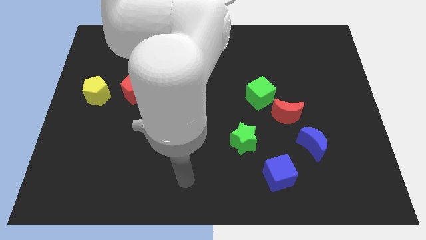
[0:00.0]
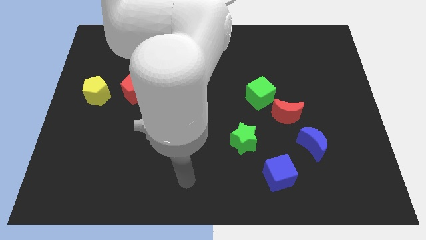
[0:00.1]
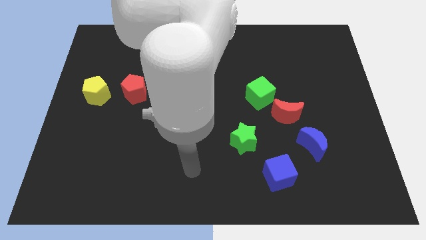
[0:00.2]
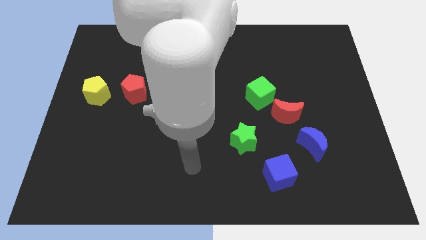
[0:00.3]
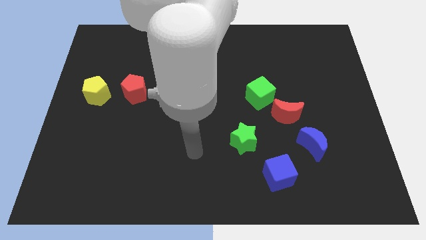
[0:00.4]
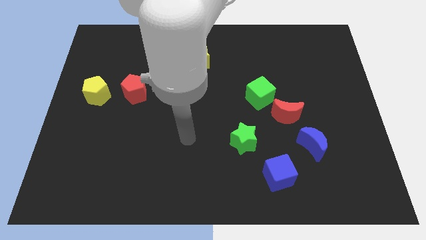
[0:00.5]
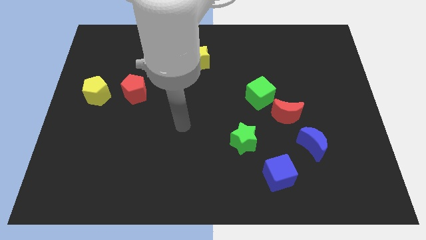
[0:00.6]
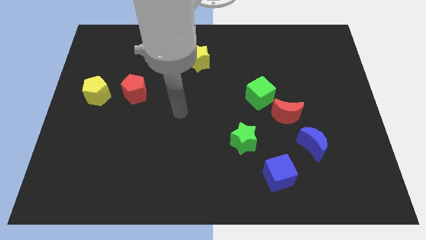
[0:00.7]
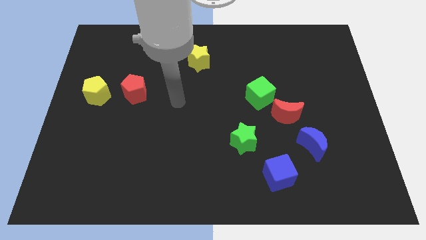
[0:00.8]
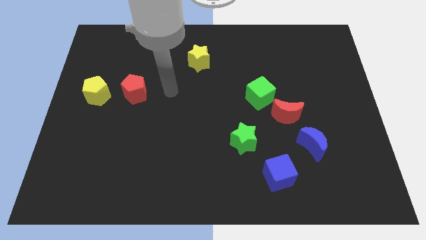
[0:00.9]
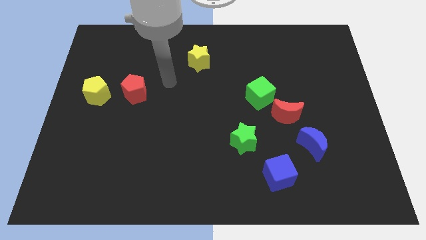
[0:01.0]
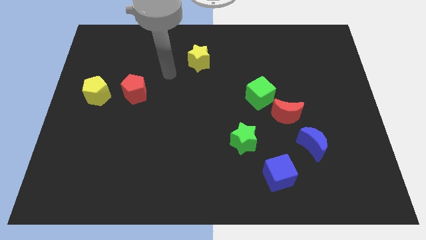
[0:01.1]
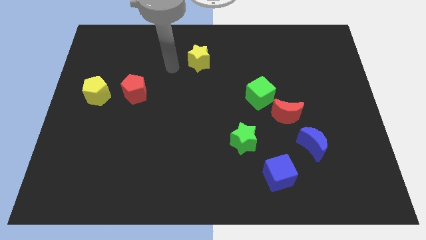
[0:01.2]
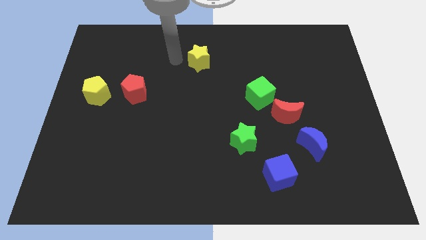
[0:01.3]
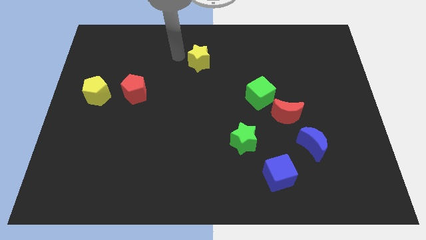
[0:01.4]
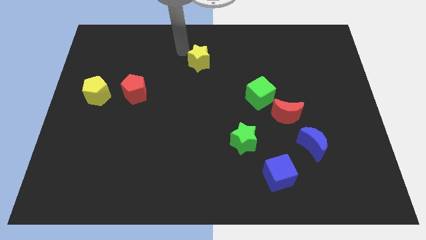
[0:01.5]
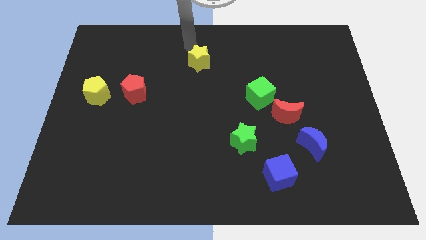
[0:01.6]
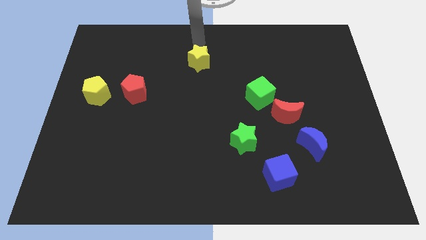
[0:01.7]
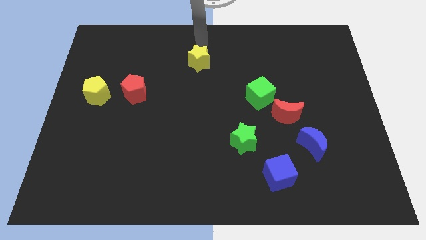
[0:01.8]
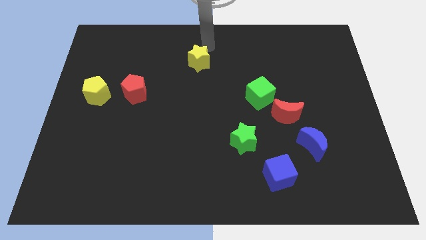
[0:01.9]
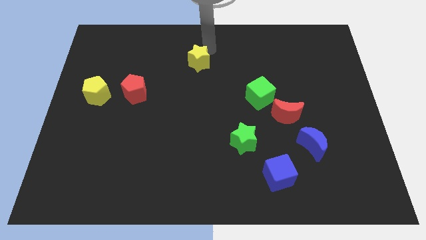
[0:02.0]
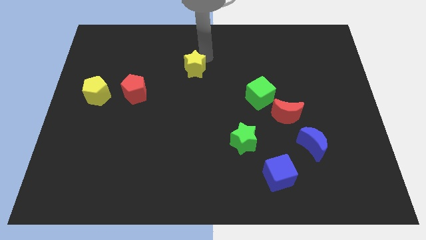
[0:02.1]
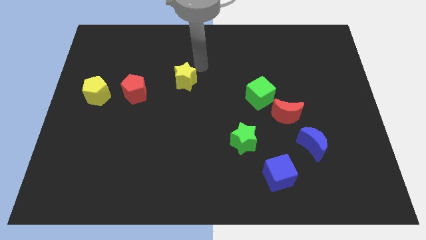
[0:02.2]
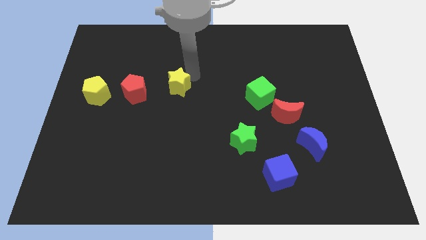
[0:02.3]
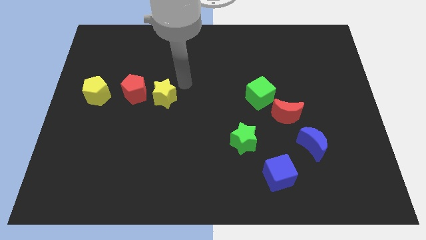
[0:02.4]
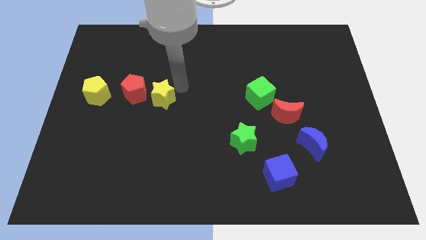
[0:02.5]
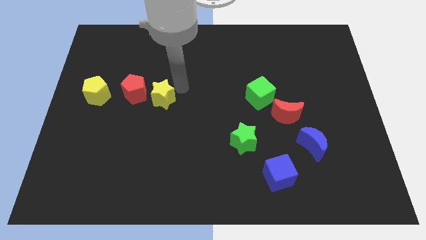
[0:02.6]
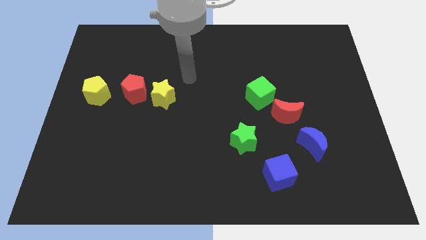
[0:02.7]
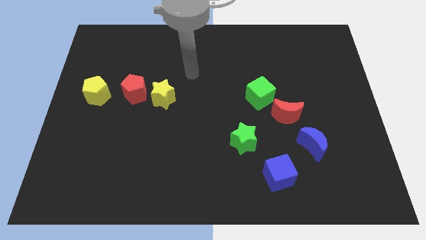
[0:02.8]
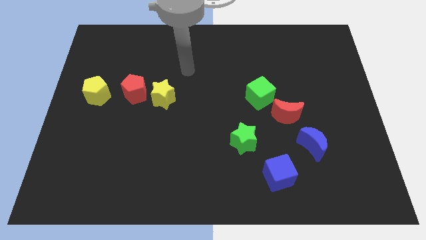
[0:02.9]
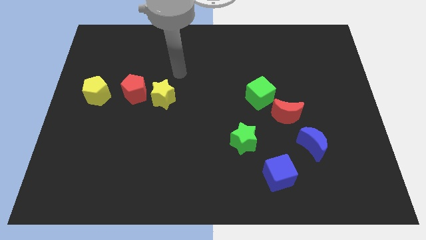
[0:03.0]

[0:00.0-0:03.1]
push the yellow star to the right side of the red pentagon

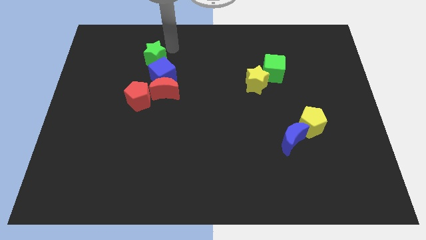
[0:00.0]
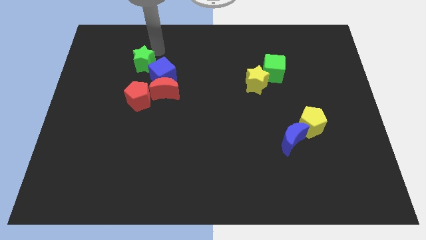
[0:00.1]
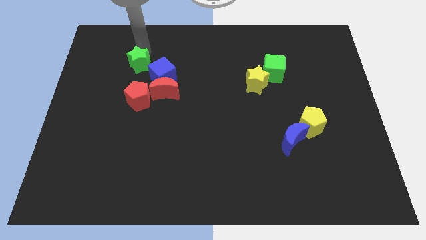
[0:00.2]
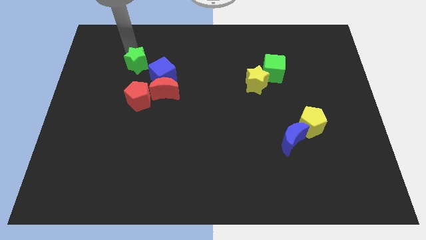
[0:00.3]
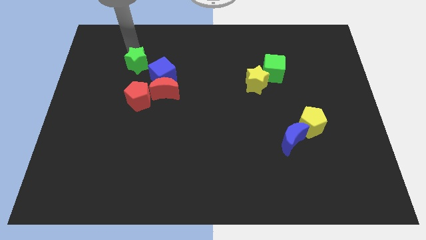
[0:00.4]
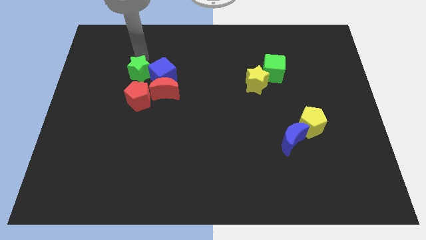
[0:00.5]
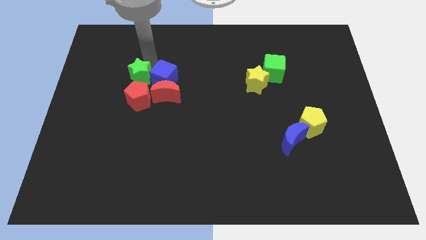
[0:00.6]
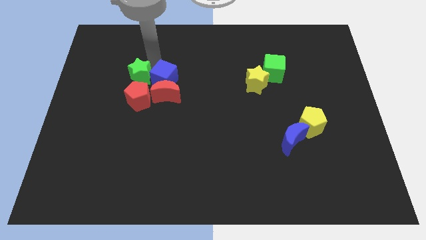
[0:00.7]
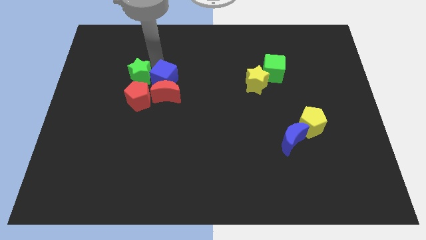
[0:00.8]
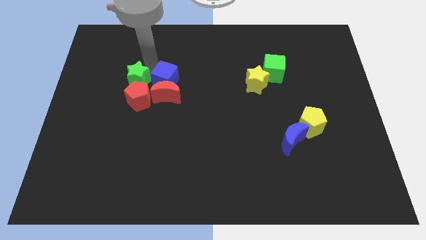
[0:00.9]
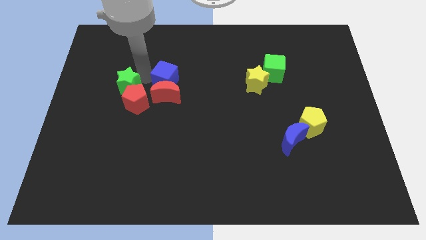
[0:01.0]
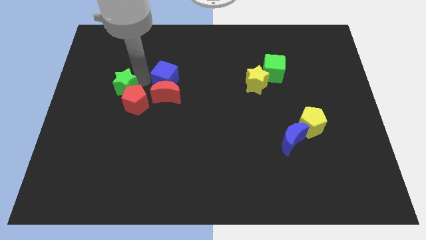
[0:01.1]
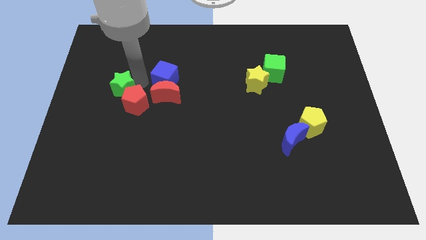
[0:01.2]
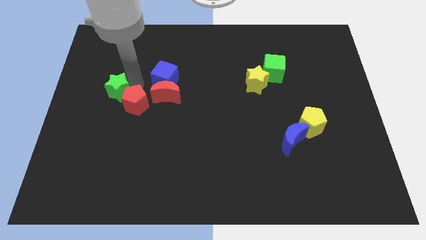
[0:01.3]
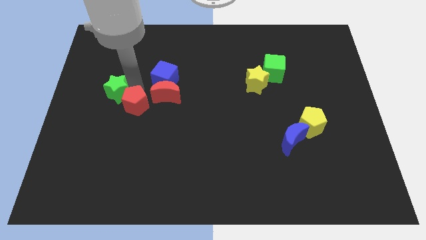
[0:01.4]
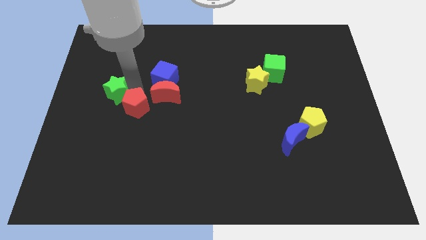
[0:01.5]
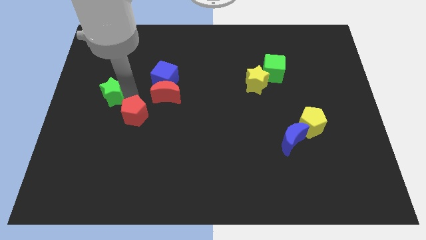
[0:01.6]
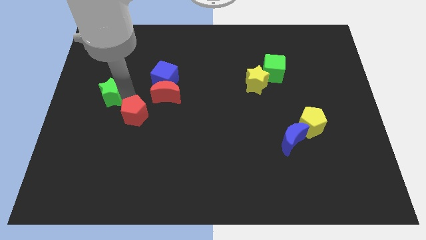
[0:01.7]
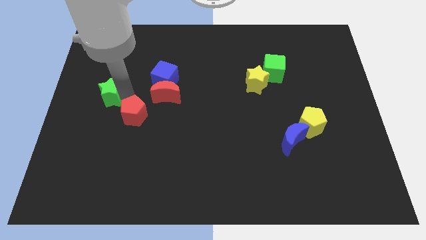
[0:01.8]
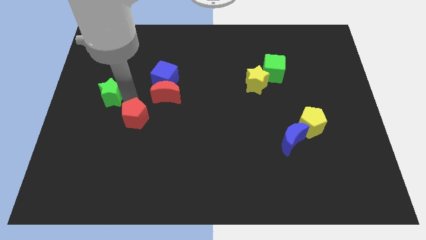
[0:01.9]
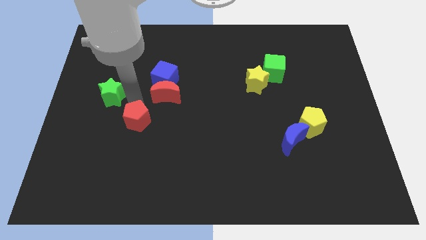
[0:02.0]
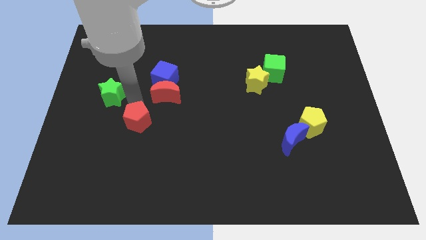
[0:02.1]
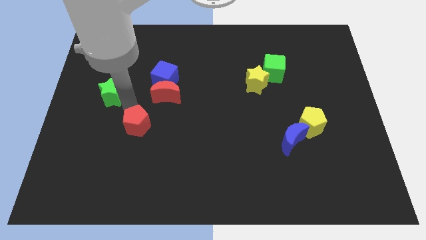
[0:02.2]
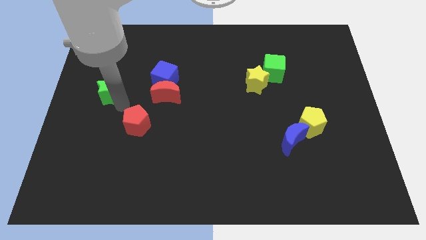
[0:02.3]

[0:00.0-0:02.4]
move the green star into the red pentagon towards the left center of the board

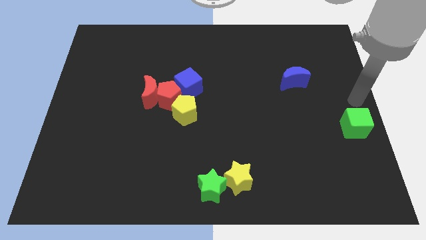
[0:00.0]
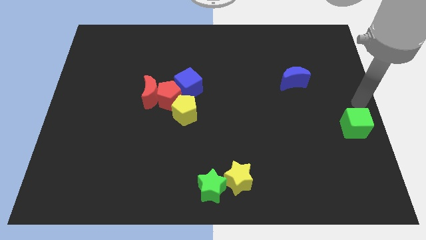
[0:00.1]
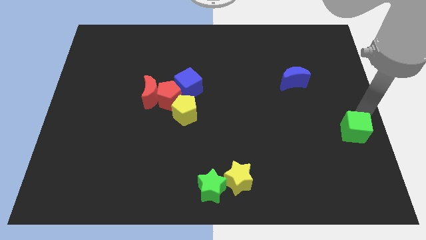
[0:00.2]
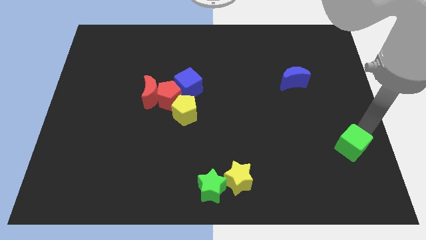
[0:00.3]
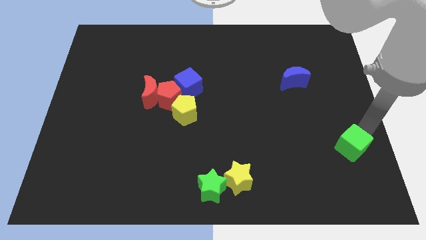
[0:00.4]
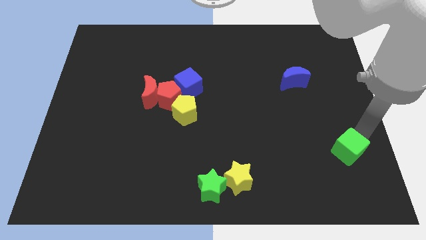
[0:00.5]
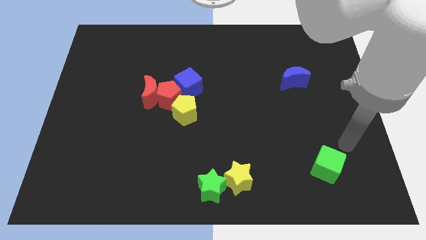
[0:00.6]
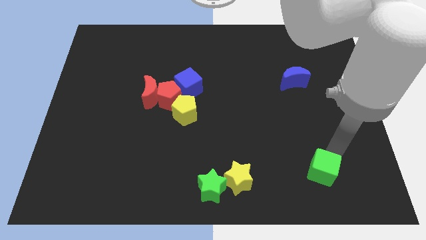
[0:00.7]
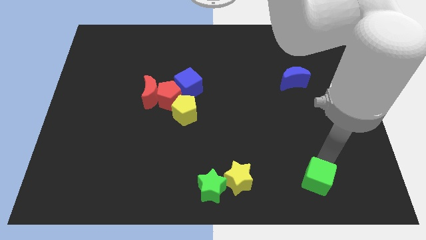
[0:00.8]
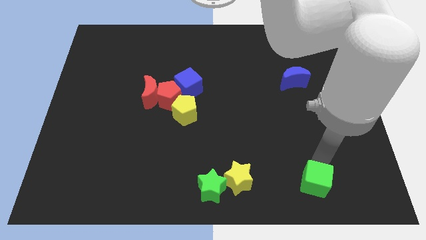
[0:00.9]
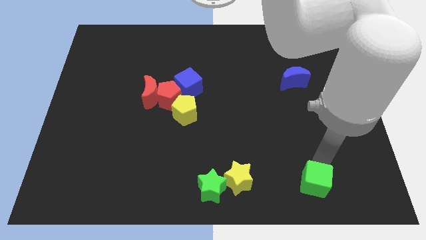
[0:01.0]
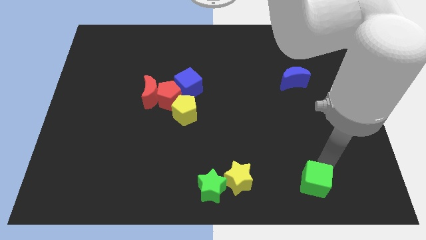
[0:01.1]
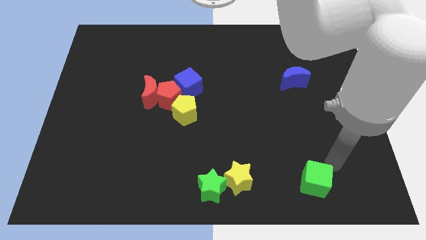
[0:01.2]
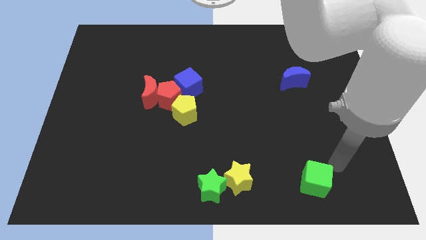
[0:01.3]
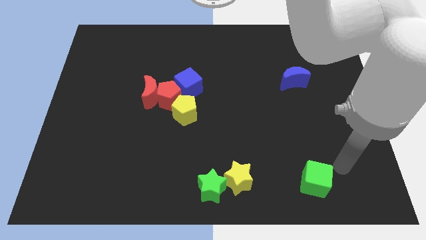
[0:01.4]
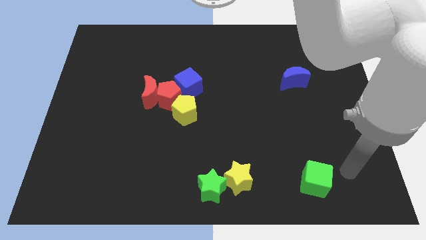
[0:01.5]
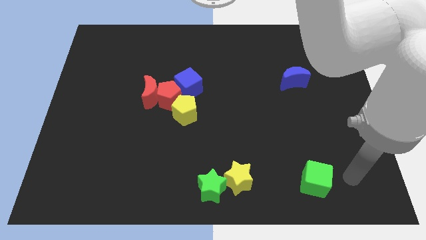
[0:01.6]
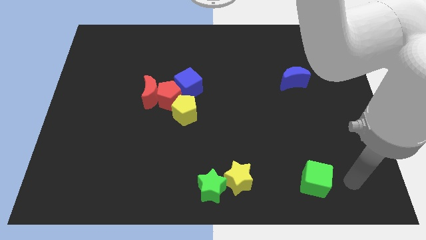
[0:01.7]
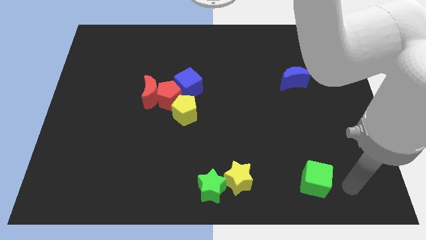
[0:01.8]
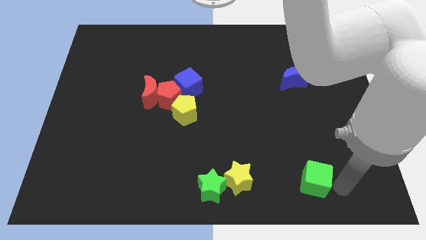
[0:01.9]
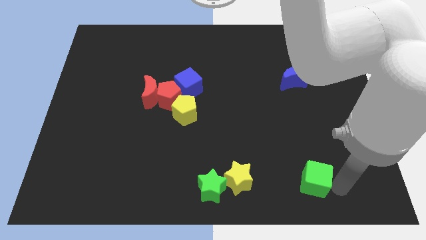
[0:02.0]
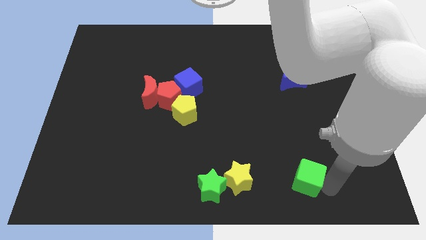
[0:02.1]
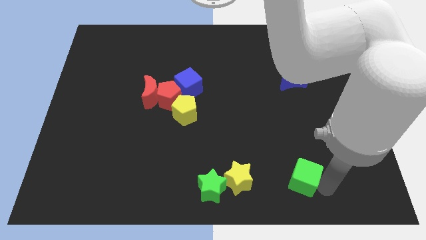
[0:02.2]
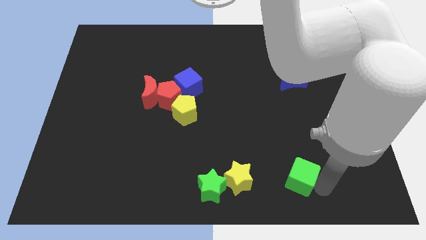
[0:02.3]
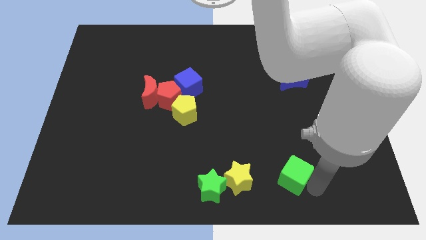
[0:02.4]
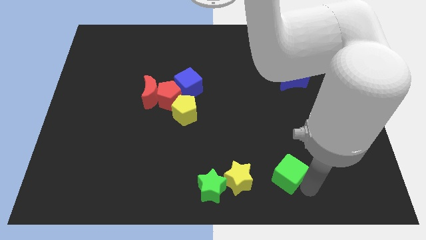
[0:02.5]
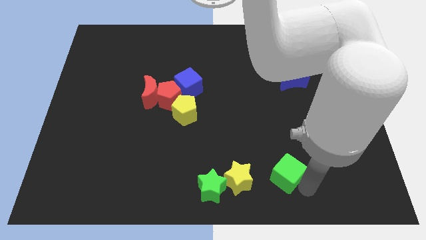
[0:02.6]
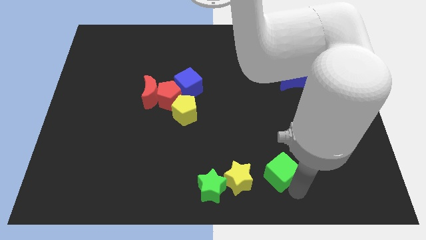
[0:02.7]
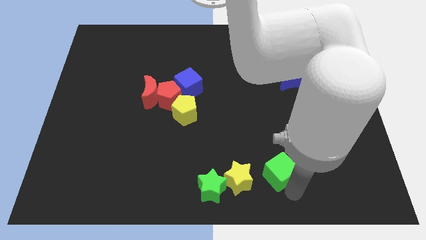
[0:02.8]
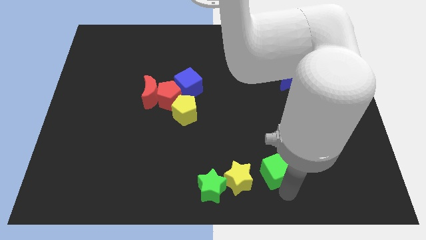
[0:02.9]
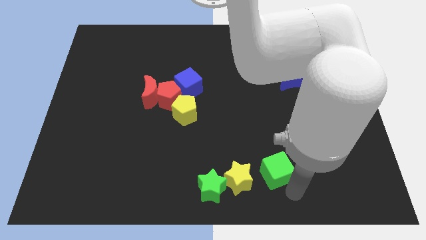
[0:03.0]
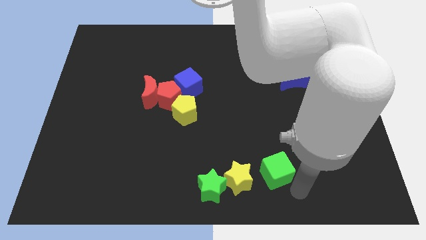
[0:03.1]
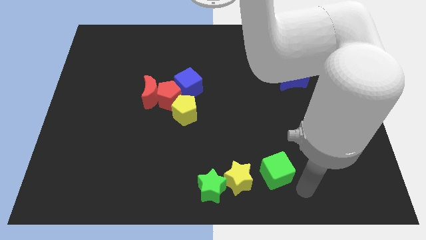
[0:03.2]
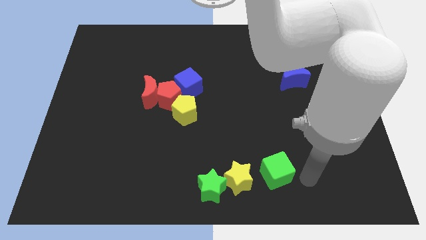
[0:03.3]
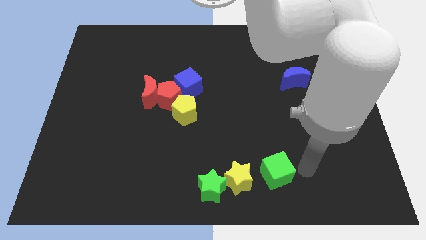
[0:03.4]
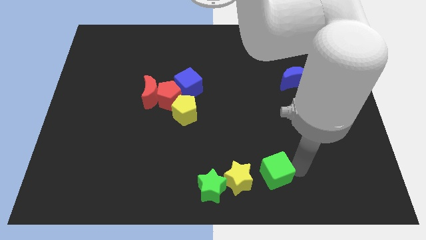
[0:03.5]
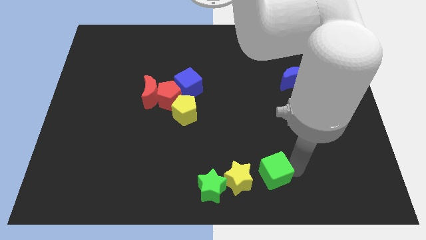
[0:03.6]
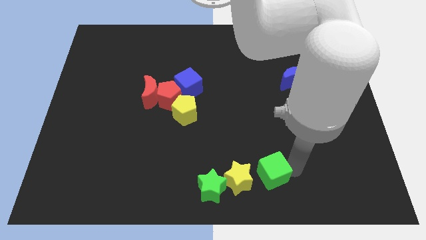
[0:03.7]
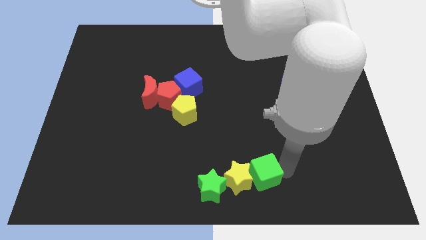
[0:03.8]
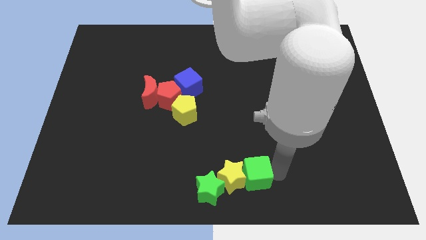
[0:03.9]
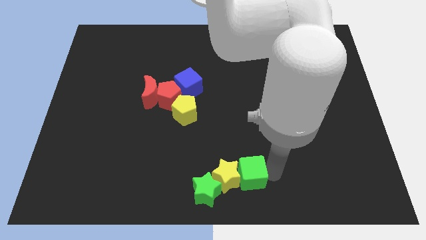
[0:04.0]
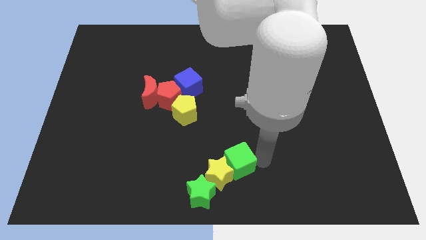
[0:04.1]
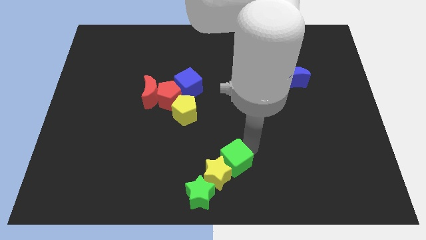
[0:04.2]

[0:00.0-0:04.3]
push the green cube into yellow star
